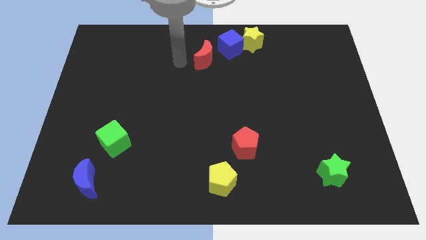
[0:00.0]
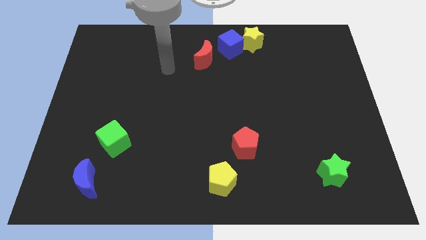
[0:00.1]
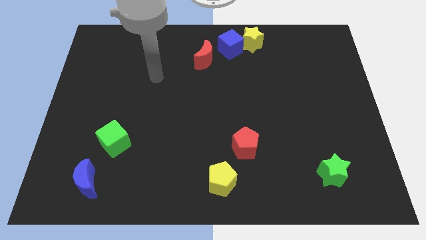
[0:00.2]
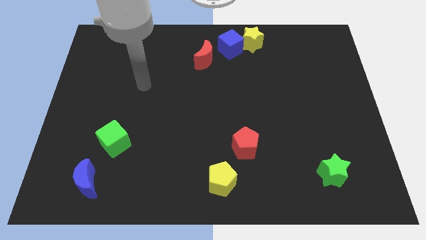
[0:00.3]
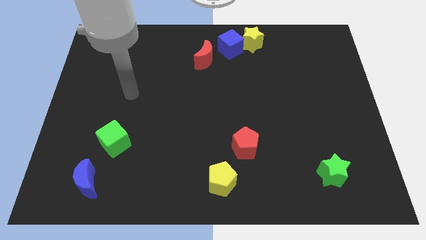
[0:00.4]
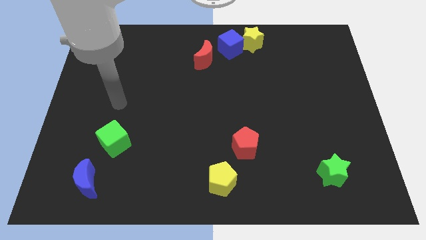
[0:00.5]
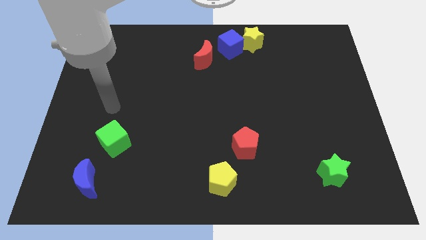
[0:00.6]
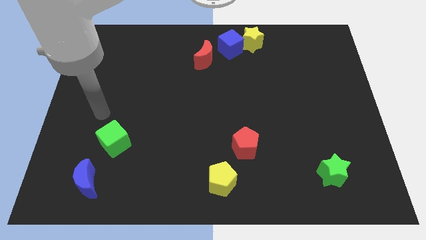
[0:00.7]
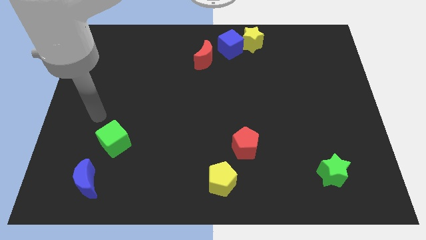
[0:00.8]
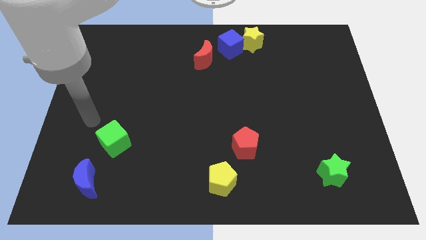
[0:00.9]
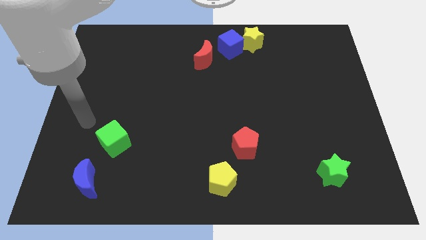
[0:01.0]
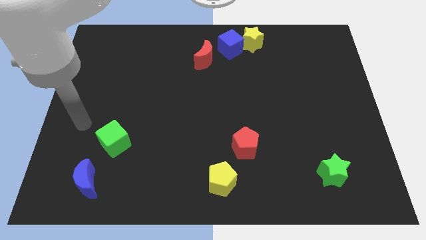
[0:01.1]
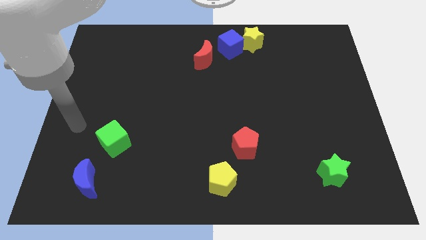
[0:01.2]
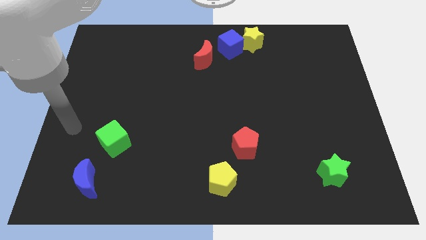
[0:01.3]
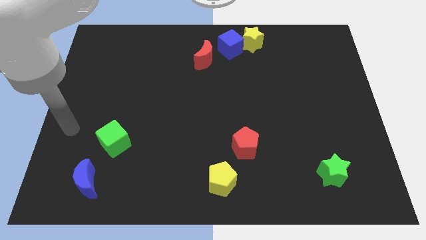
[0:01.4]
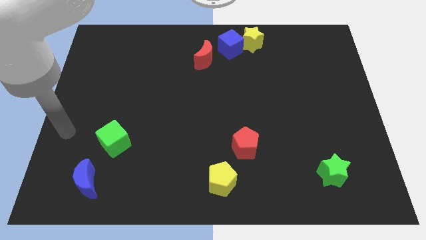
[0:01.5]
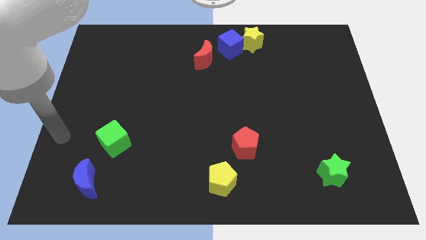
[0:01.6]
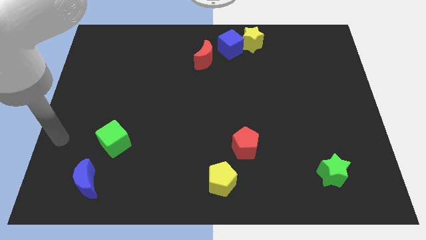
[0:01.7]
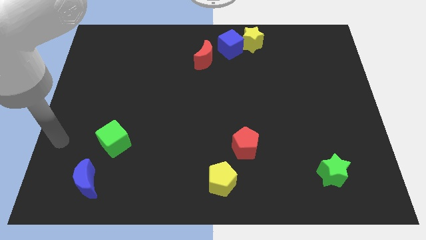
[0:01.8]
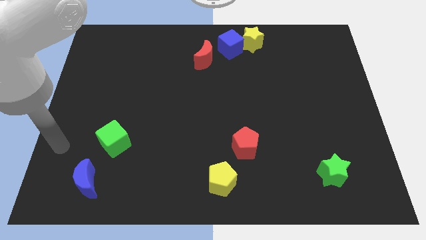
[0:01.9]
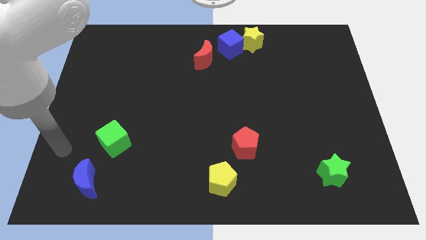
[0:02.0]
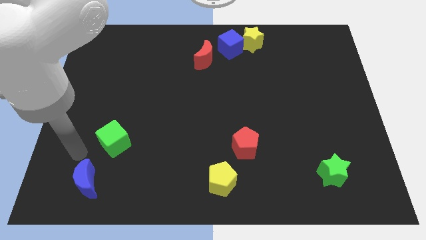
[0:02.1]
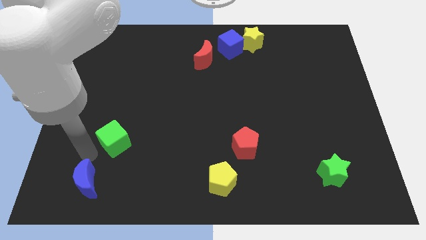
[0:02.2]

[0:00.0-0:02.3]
move your arm and point between green cube and blue moon

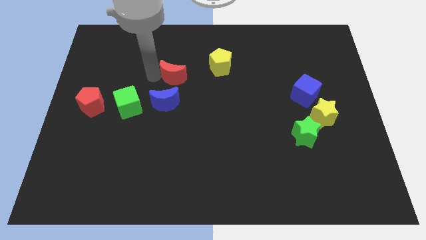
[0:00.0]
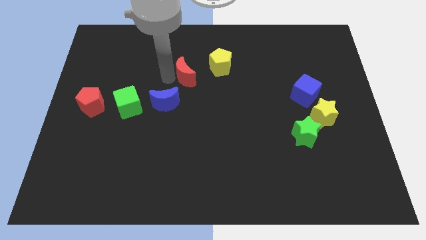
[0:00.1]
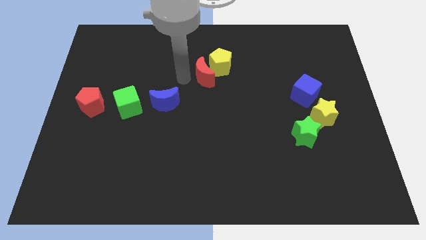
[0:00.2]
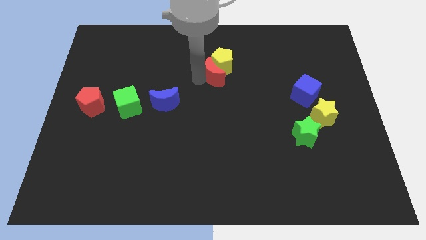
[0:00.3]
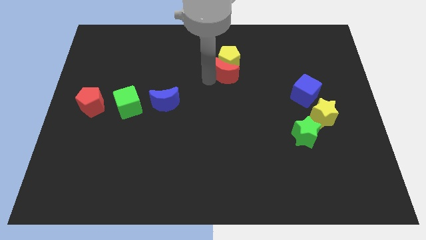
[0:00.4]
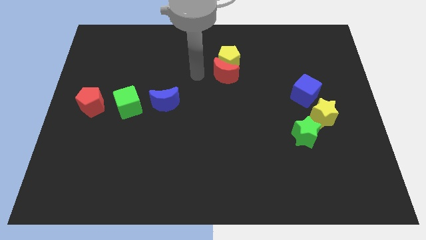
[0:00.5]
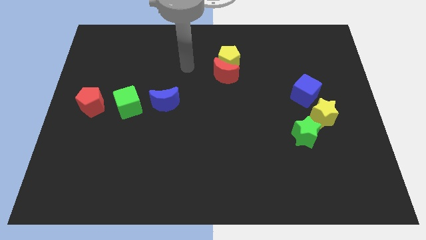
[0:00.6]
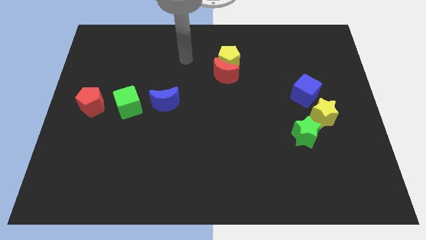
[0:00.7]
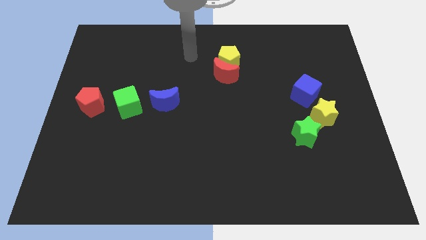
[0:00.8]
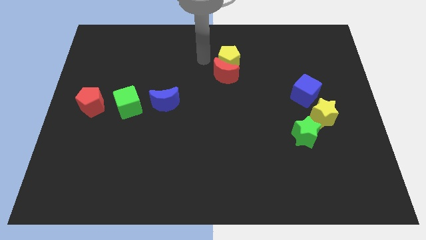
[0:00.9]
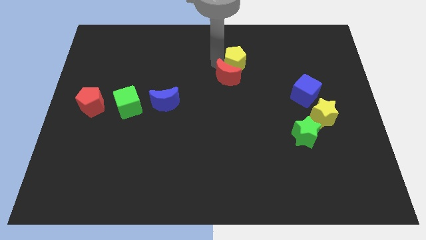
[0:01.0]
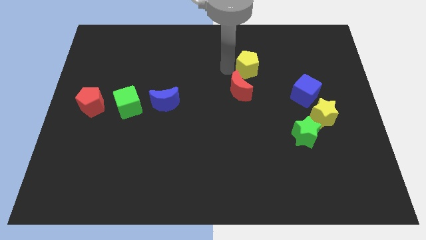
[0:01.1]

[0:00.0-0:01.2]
push the red crescent into the yellow pentagon

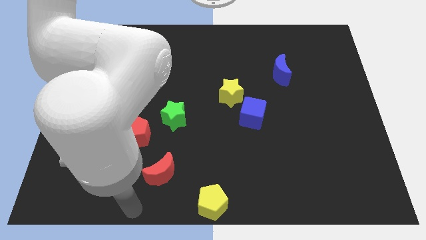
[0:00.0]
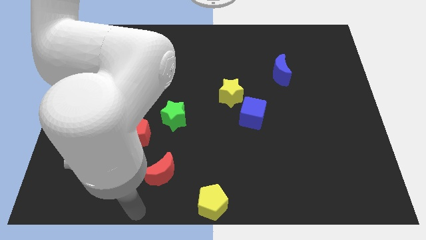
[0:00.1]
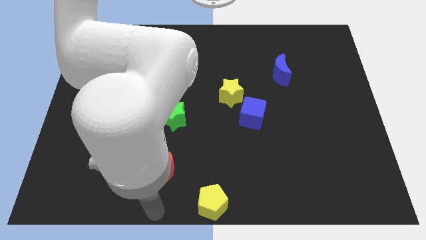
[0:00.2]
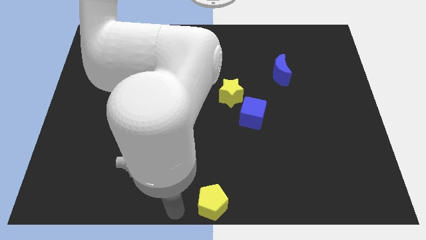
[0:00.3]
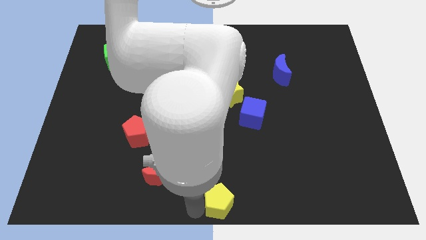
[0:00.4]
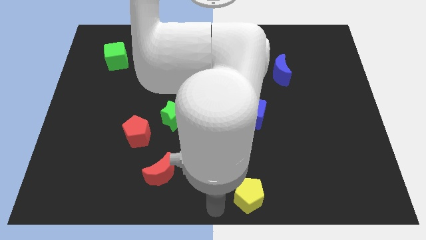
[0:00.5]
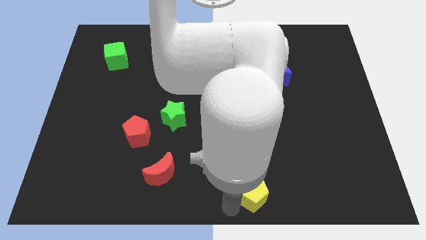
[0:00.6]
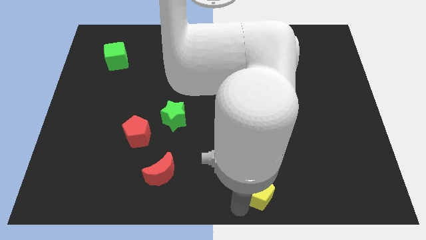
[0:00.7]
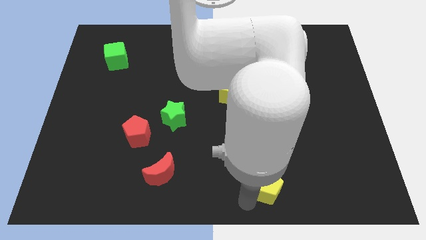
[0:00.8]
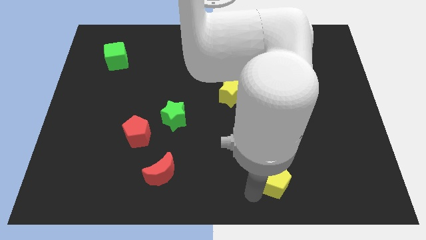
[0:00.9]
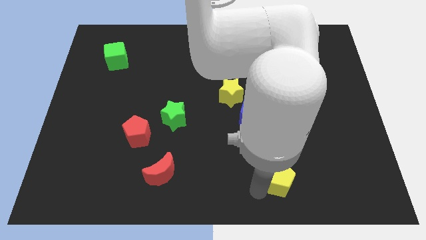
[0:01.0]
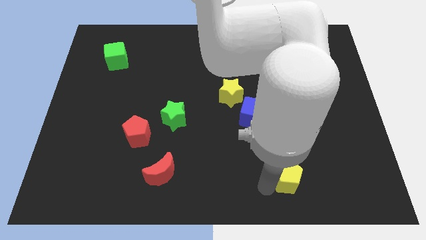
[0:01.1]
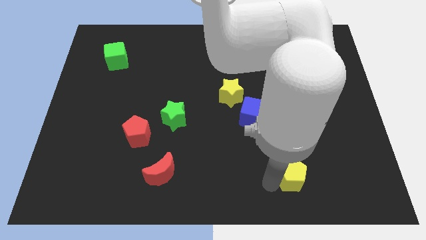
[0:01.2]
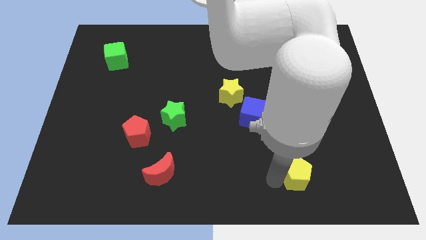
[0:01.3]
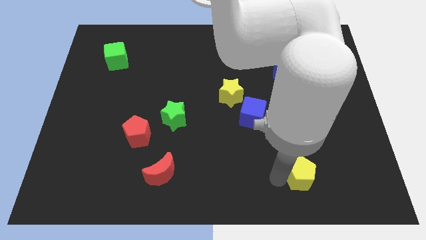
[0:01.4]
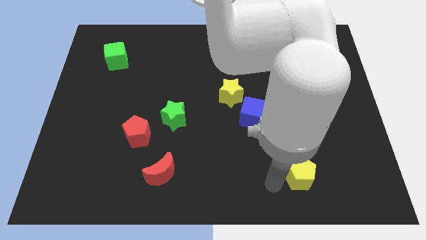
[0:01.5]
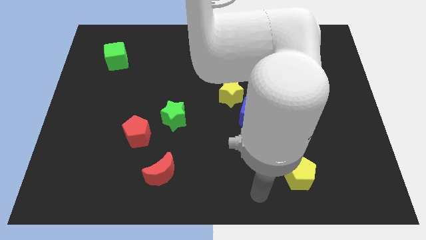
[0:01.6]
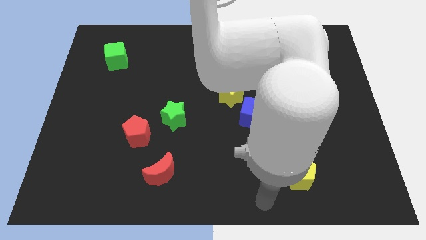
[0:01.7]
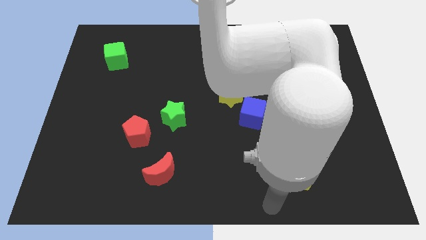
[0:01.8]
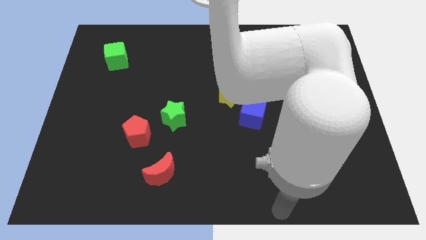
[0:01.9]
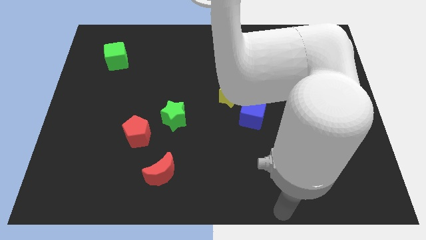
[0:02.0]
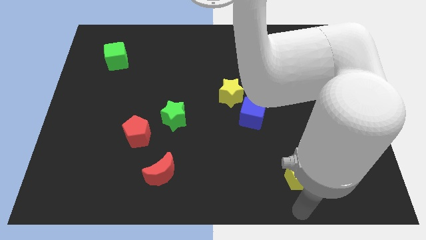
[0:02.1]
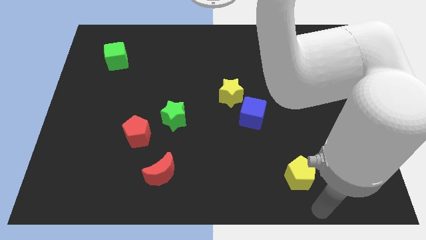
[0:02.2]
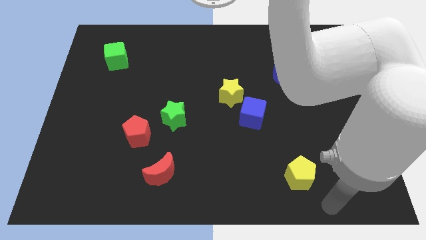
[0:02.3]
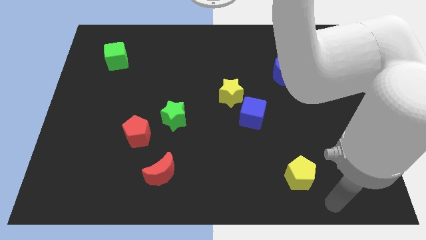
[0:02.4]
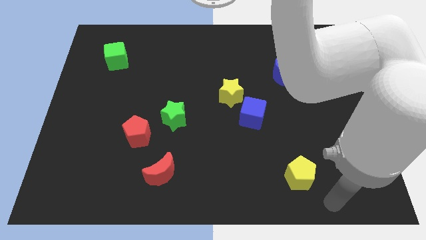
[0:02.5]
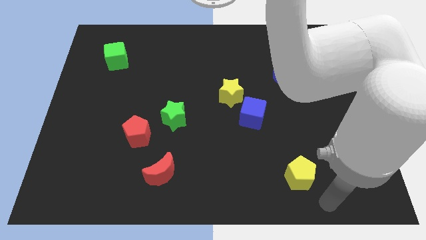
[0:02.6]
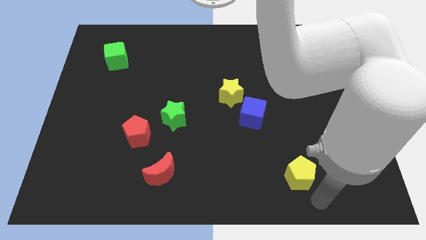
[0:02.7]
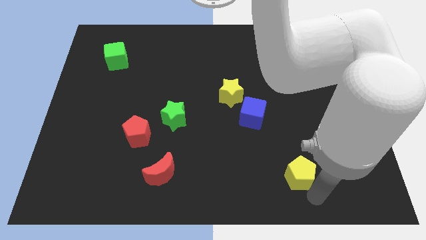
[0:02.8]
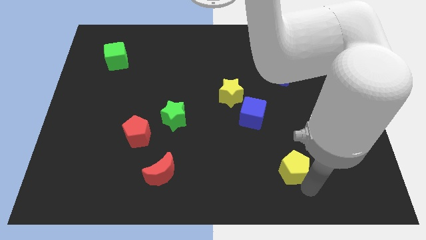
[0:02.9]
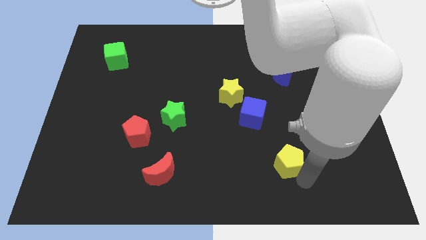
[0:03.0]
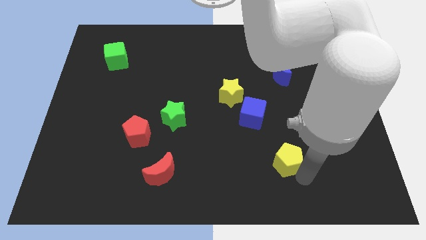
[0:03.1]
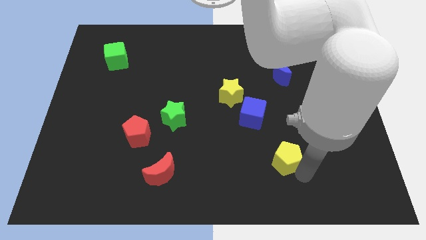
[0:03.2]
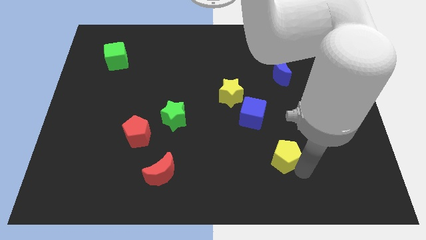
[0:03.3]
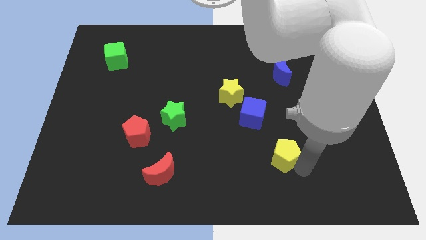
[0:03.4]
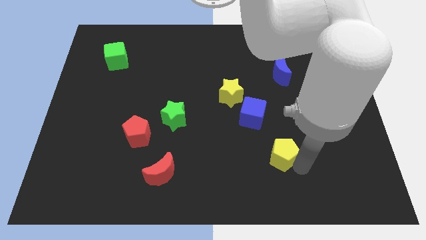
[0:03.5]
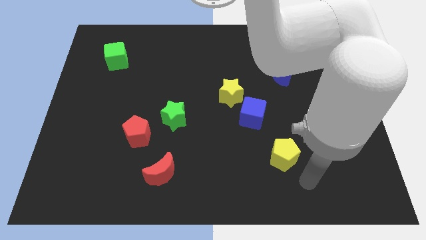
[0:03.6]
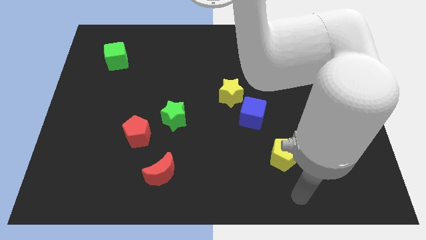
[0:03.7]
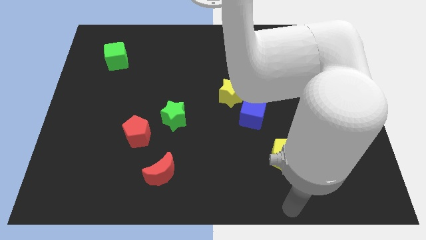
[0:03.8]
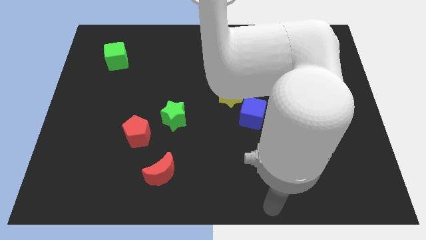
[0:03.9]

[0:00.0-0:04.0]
place the yellow pentagon vertically below the blue moon

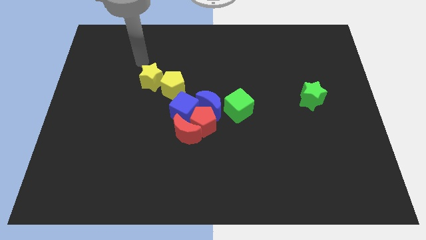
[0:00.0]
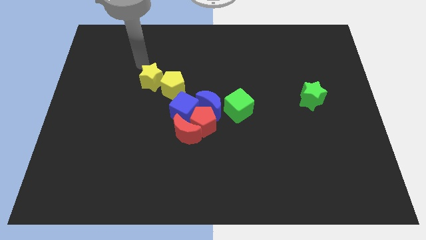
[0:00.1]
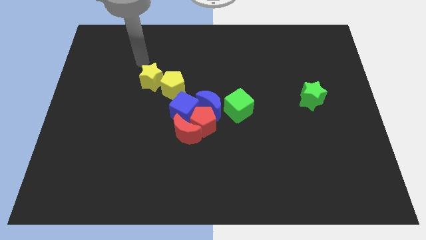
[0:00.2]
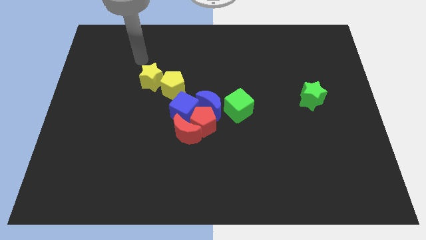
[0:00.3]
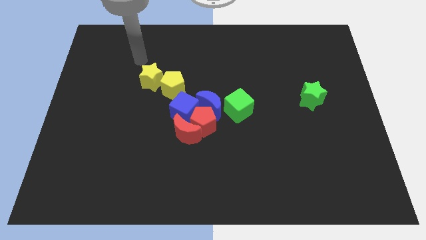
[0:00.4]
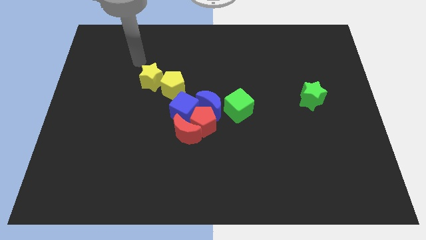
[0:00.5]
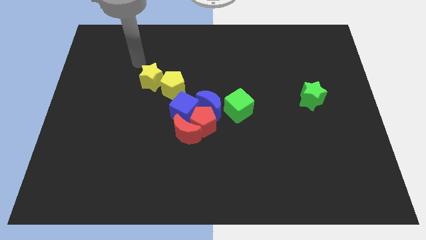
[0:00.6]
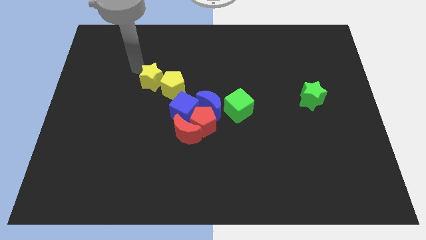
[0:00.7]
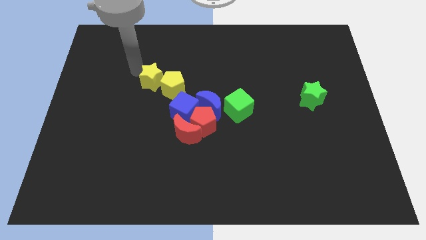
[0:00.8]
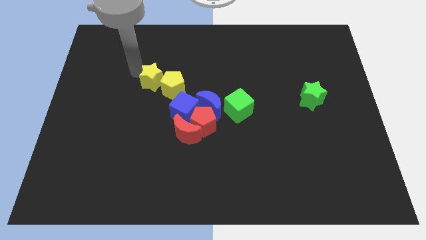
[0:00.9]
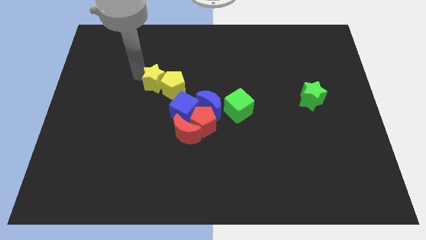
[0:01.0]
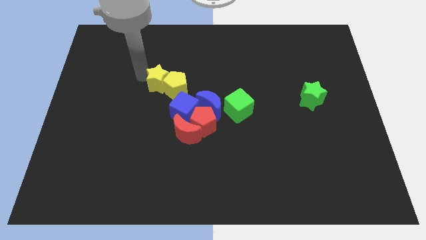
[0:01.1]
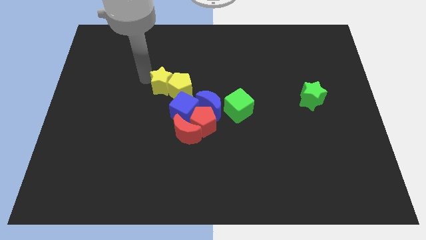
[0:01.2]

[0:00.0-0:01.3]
push the yellow star into yellow pentagon

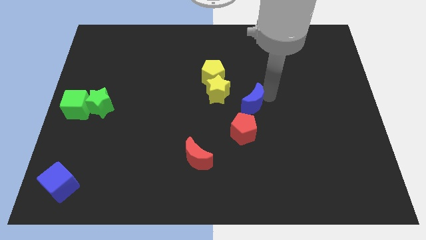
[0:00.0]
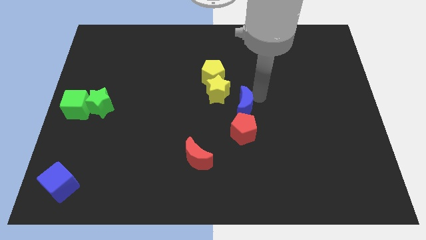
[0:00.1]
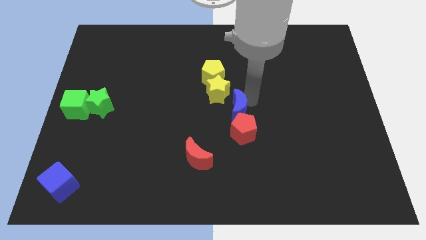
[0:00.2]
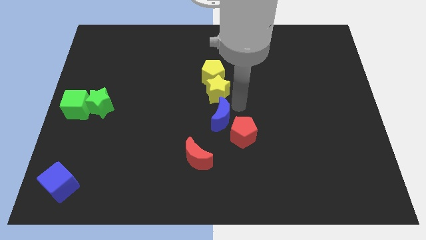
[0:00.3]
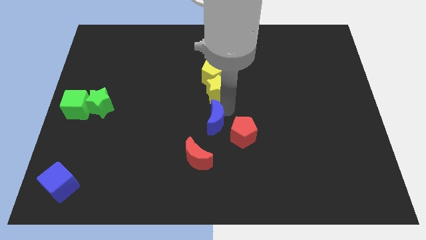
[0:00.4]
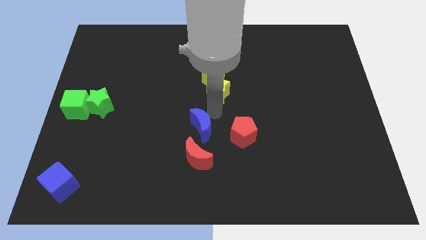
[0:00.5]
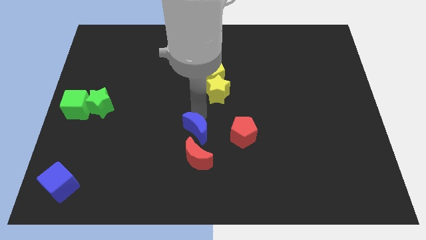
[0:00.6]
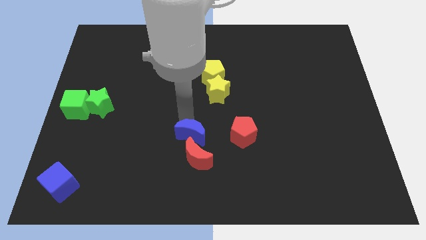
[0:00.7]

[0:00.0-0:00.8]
push the blue crescent top of the red crescent
